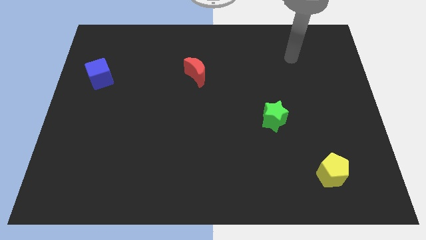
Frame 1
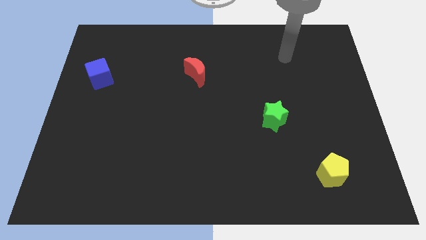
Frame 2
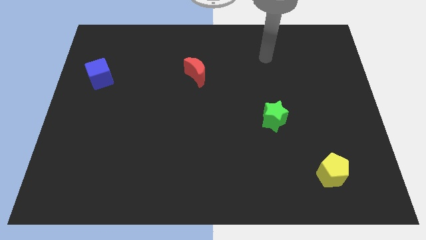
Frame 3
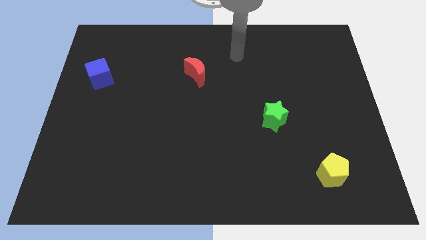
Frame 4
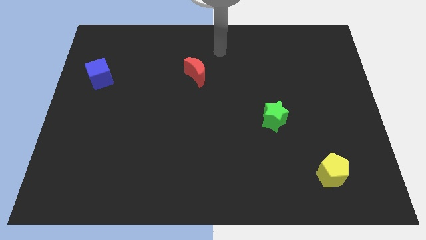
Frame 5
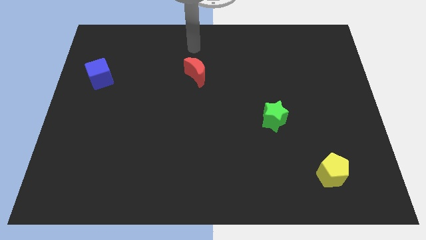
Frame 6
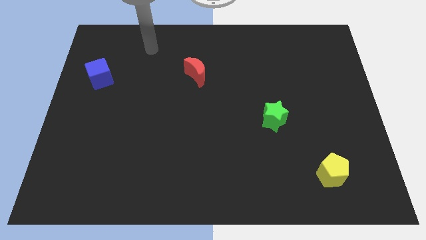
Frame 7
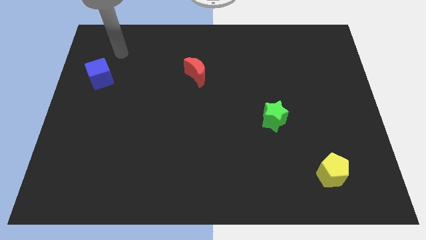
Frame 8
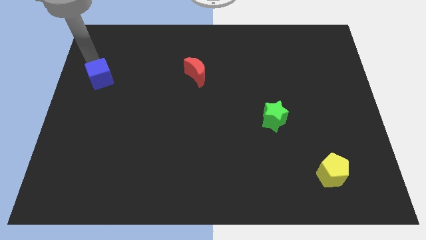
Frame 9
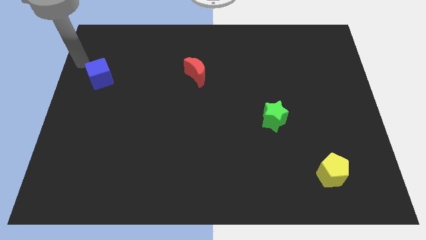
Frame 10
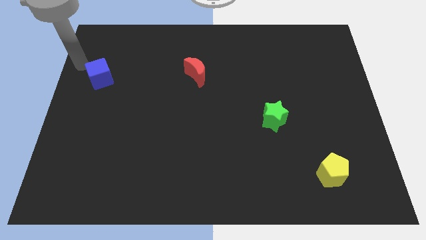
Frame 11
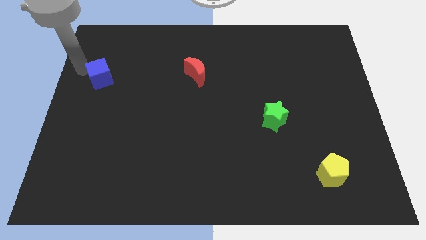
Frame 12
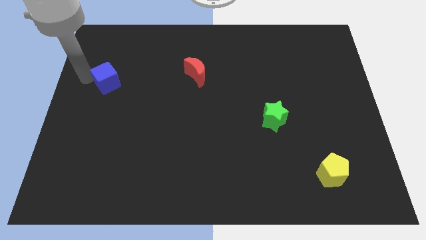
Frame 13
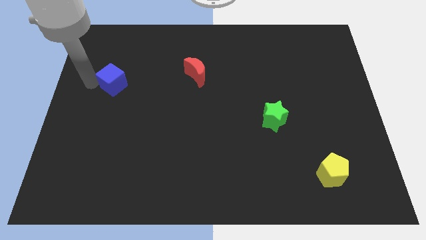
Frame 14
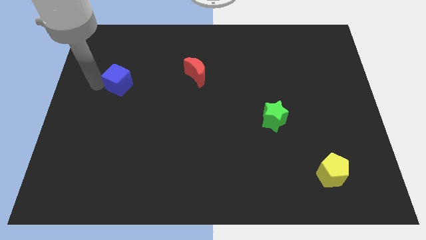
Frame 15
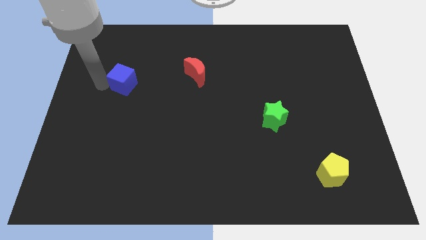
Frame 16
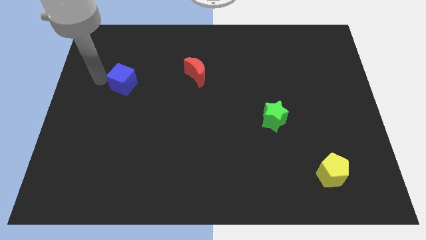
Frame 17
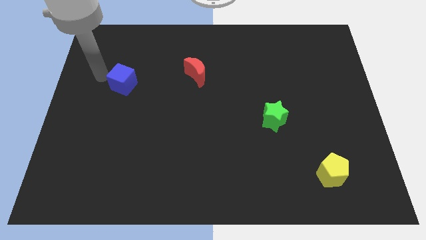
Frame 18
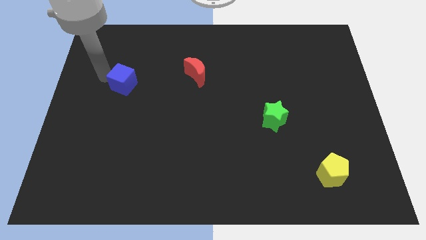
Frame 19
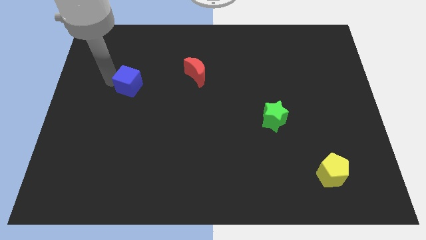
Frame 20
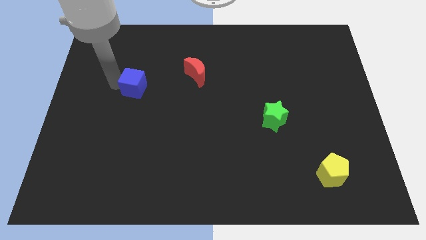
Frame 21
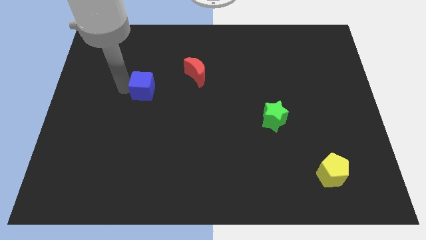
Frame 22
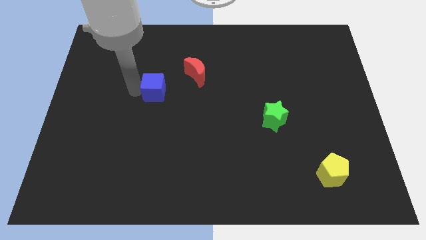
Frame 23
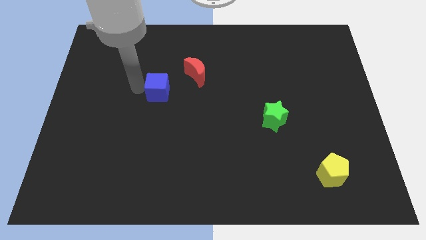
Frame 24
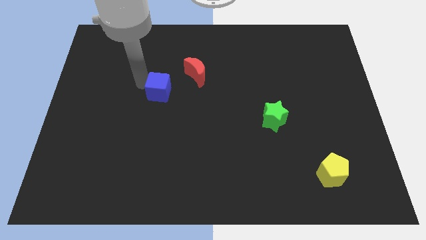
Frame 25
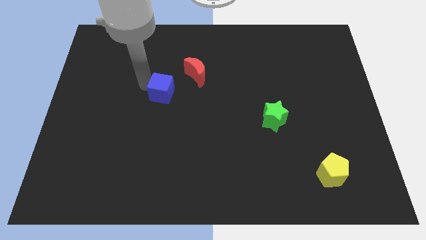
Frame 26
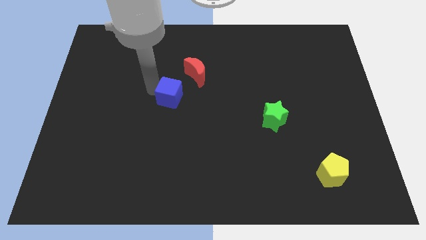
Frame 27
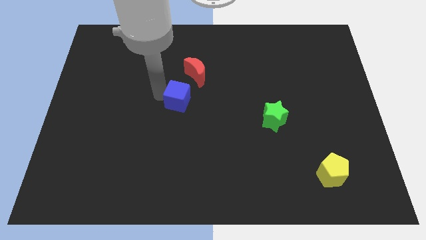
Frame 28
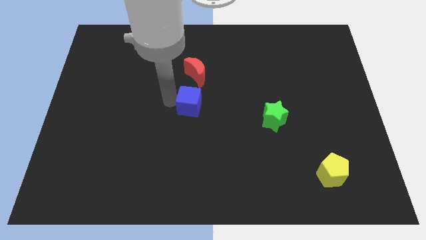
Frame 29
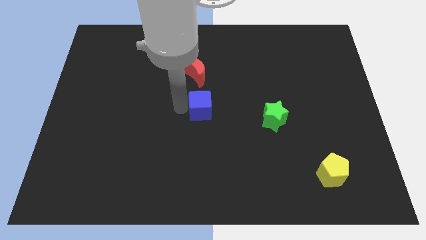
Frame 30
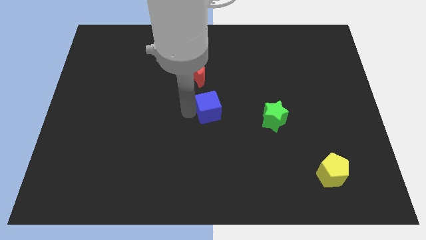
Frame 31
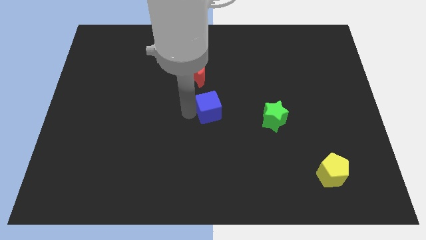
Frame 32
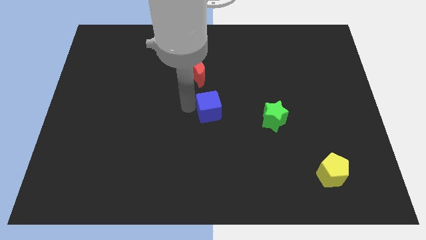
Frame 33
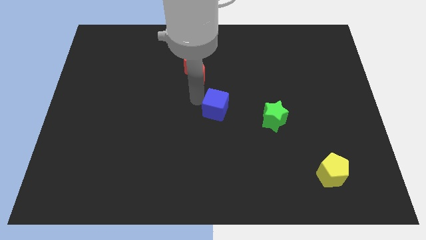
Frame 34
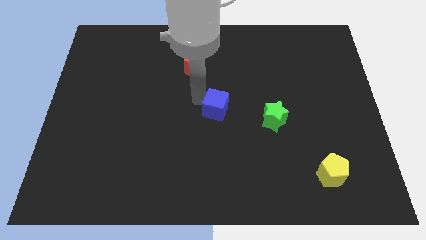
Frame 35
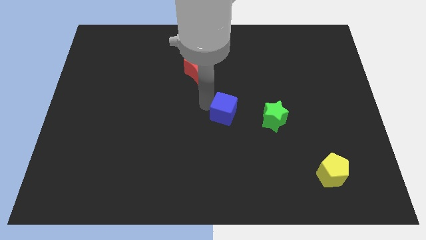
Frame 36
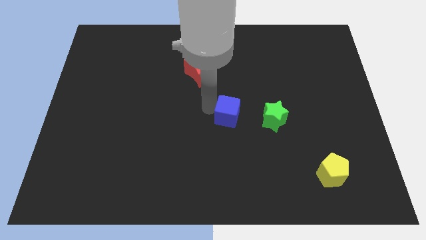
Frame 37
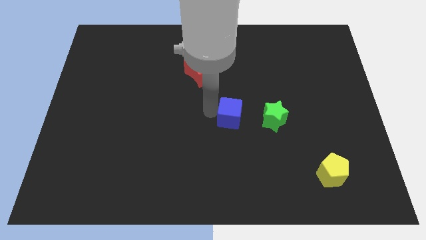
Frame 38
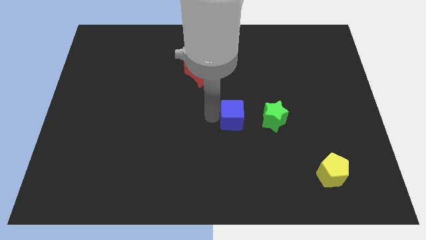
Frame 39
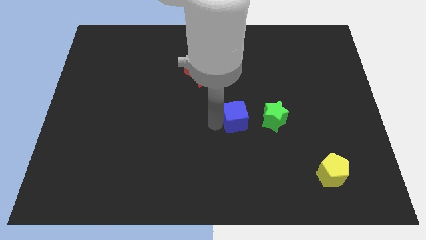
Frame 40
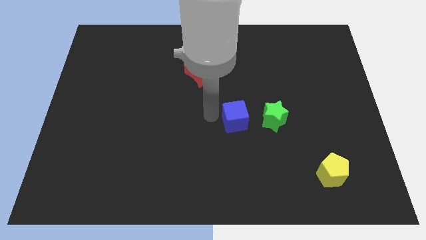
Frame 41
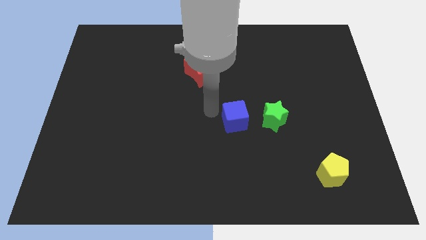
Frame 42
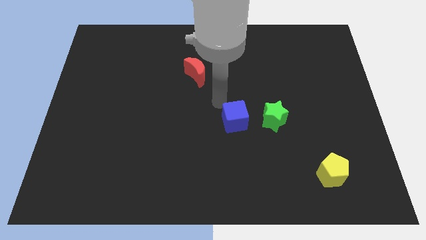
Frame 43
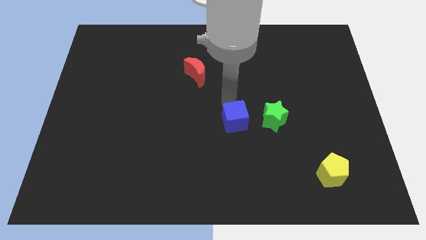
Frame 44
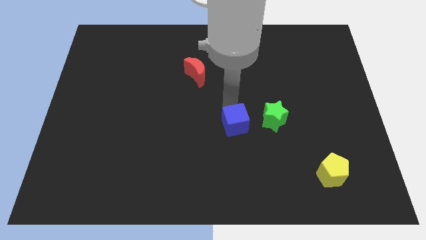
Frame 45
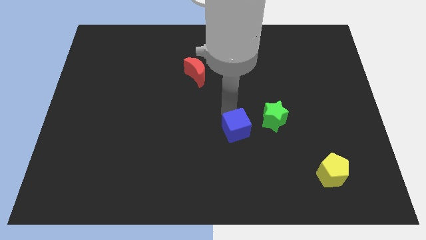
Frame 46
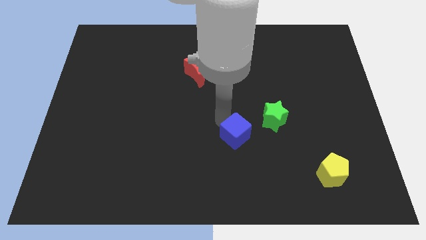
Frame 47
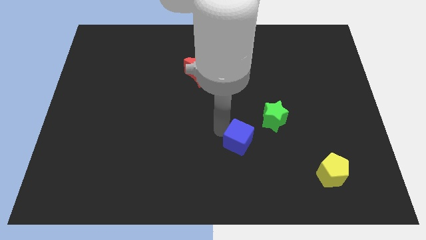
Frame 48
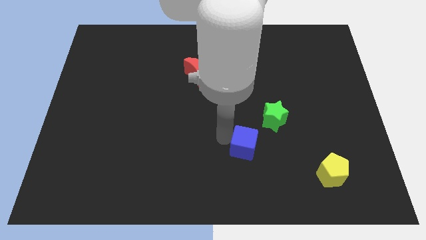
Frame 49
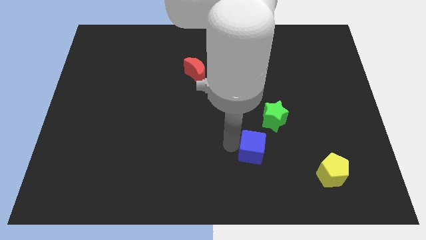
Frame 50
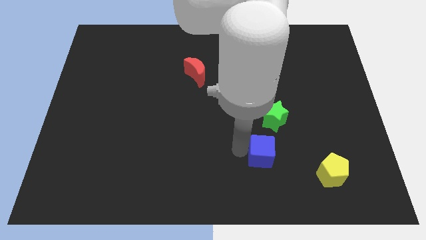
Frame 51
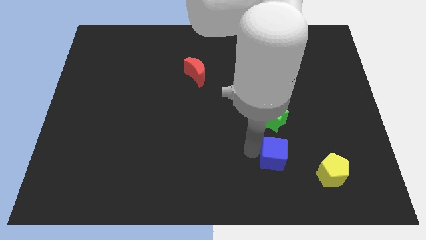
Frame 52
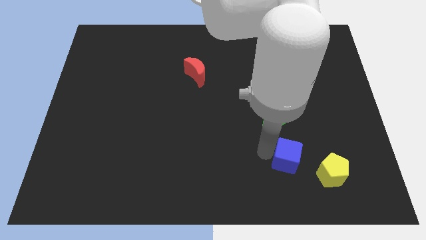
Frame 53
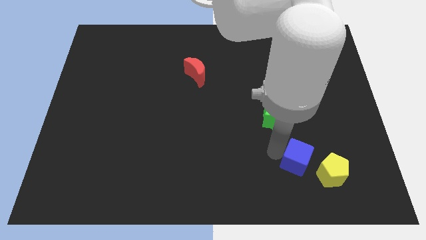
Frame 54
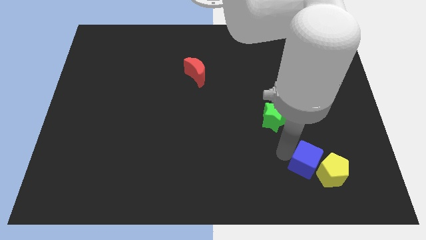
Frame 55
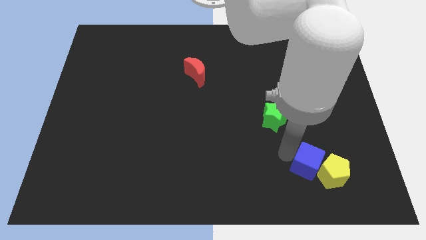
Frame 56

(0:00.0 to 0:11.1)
put the blue cube towards the yellow block

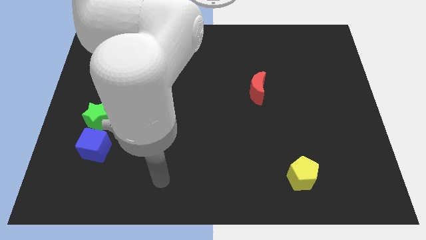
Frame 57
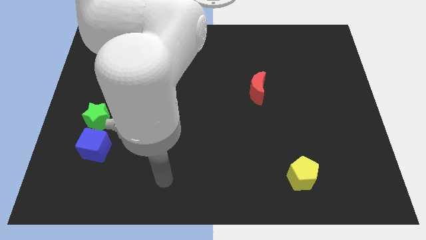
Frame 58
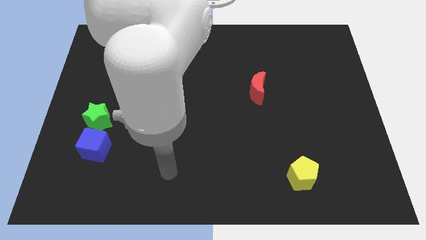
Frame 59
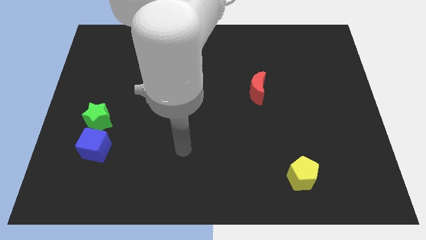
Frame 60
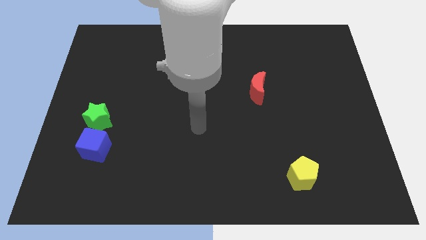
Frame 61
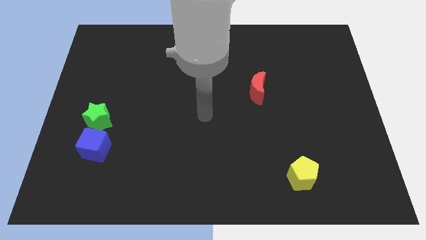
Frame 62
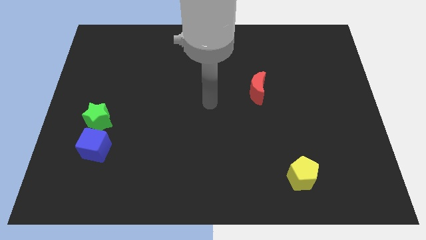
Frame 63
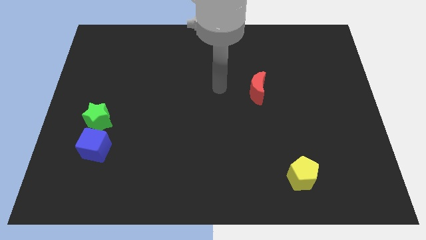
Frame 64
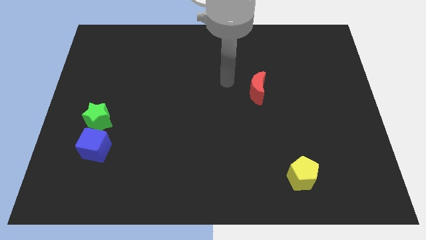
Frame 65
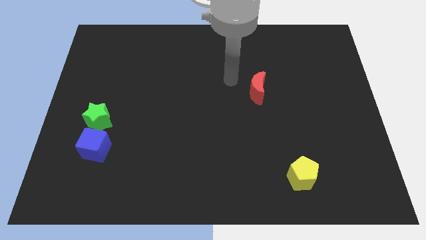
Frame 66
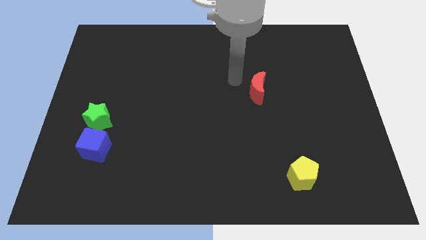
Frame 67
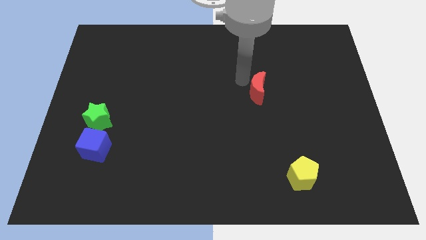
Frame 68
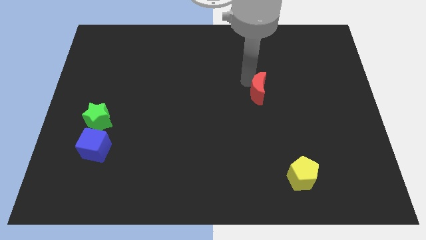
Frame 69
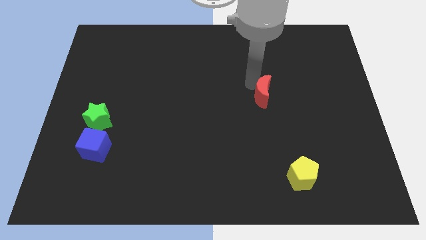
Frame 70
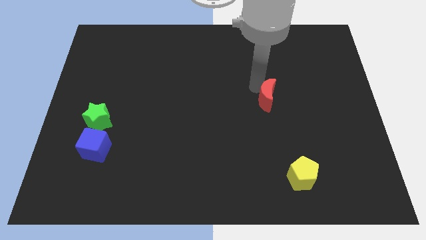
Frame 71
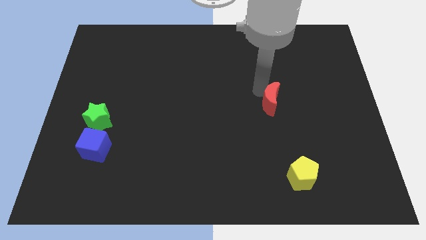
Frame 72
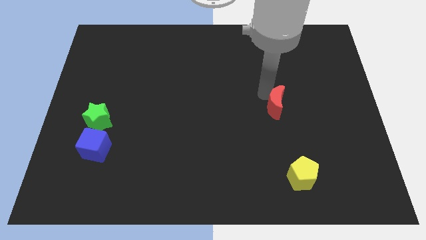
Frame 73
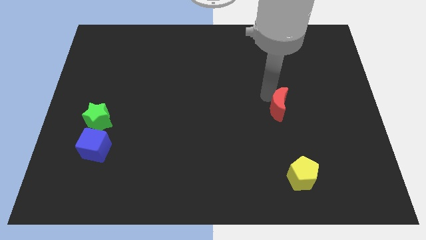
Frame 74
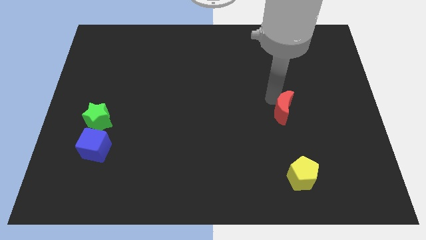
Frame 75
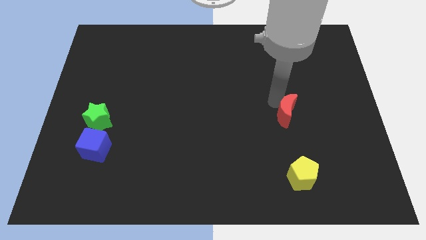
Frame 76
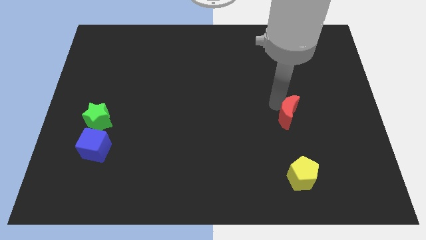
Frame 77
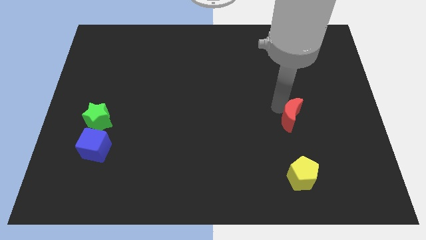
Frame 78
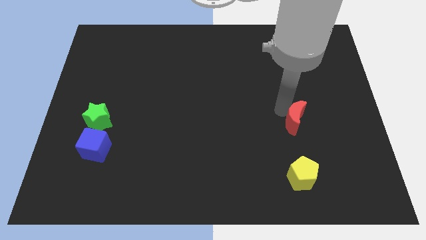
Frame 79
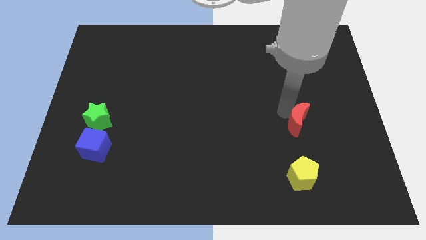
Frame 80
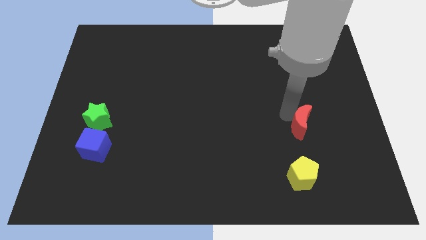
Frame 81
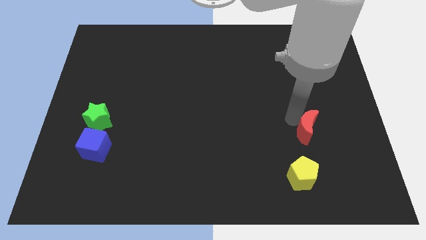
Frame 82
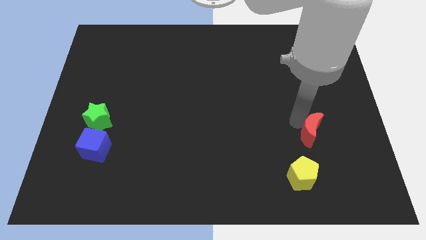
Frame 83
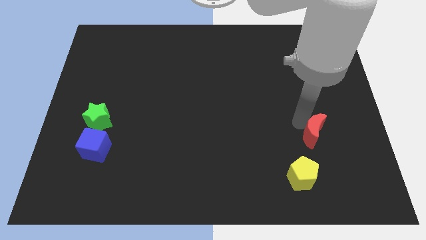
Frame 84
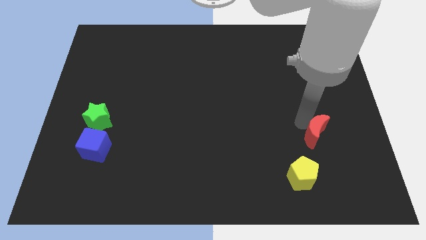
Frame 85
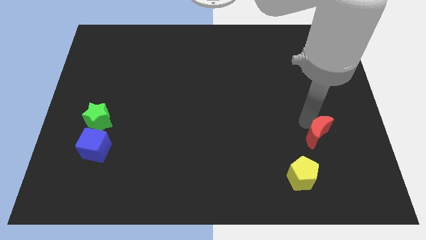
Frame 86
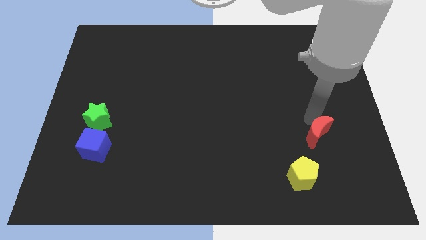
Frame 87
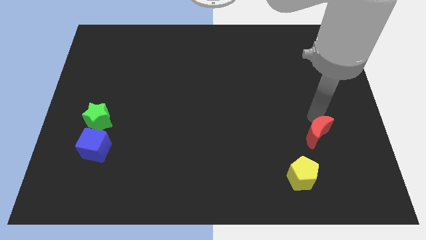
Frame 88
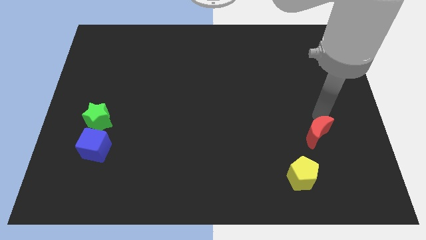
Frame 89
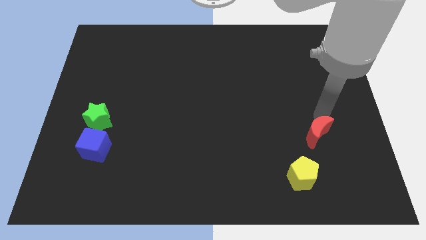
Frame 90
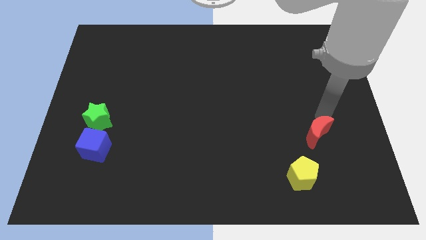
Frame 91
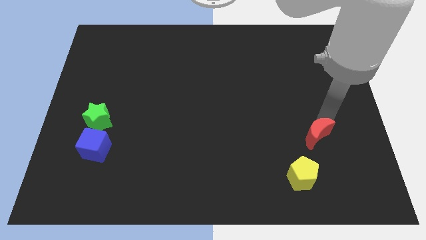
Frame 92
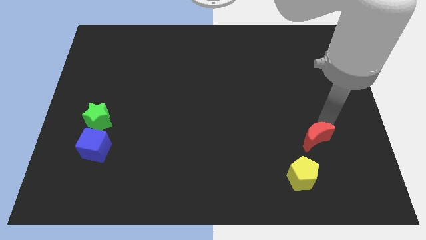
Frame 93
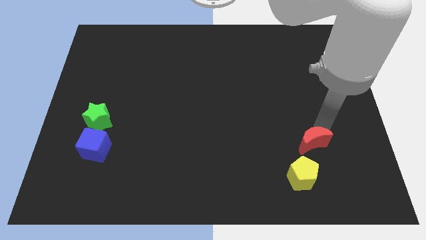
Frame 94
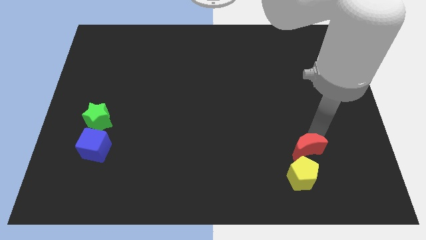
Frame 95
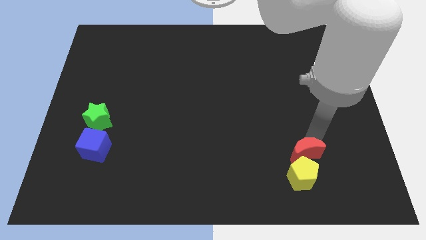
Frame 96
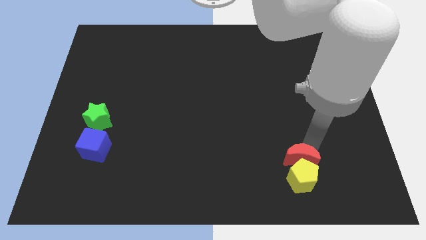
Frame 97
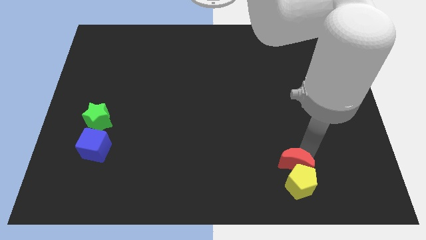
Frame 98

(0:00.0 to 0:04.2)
slide the moon towards the yellow block
